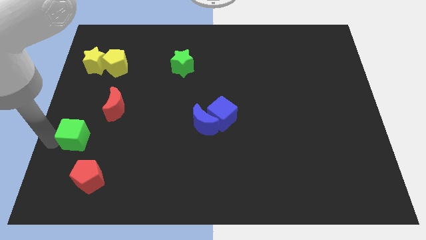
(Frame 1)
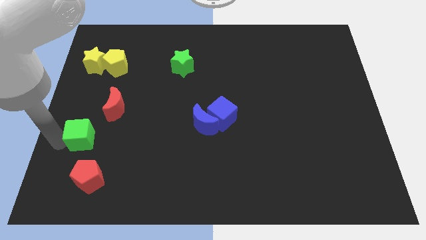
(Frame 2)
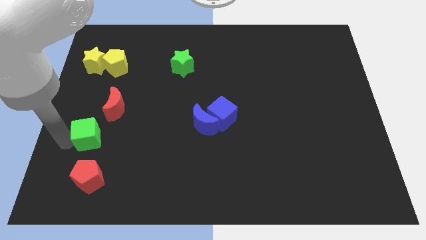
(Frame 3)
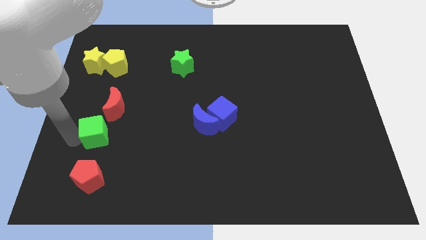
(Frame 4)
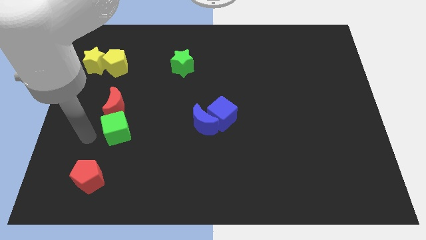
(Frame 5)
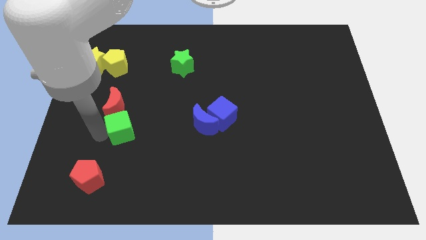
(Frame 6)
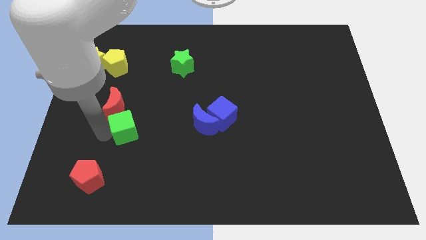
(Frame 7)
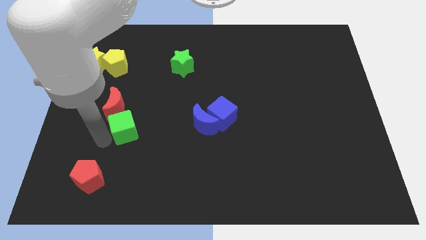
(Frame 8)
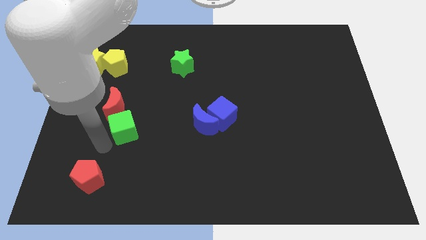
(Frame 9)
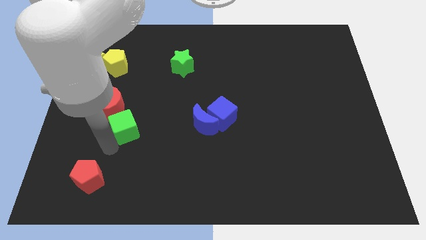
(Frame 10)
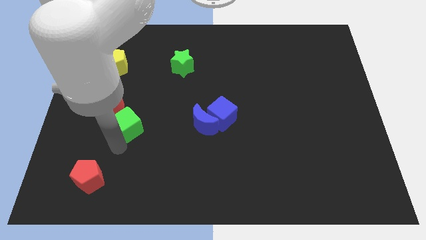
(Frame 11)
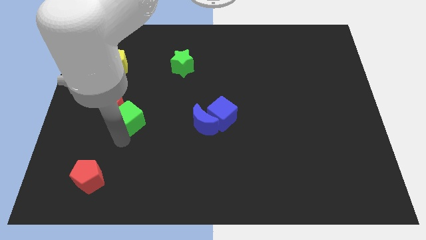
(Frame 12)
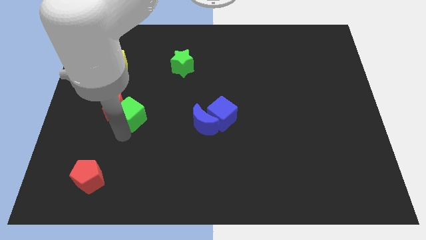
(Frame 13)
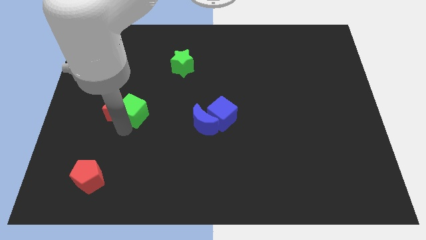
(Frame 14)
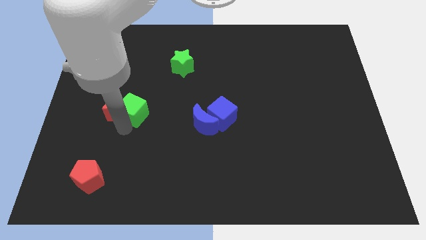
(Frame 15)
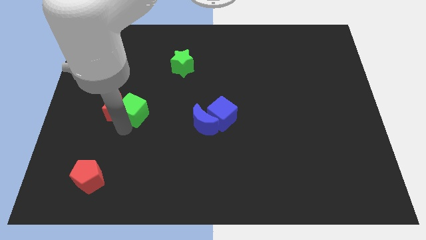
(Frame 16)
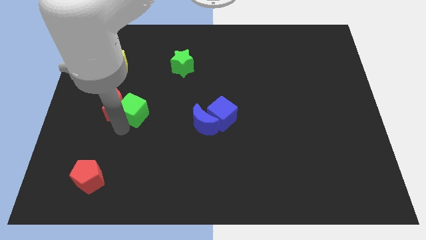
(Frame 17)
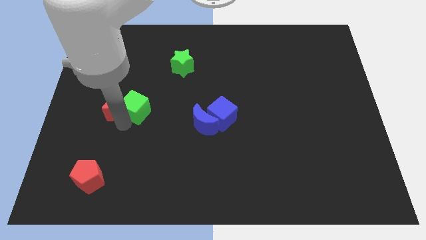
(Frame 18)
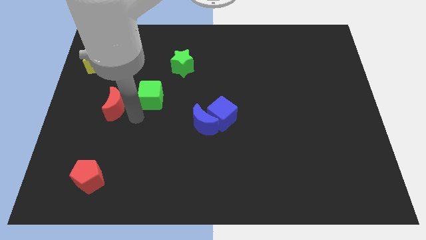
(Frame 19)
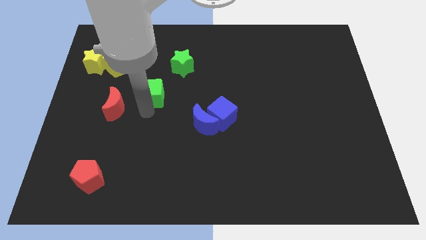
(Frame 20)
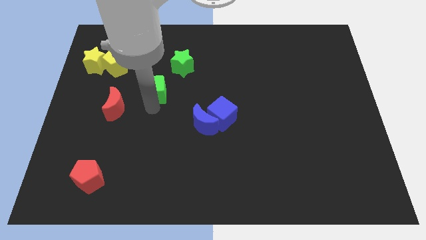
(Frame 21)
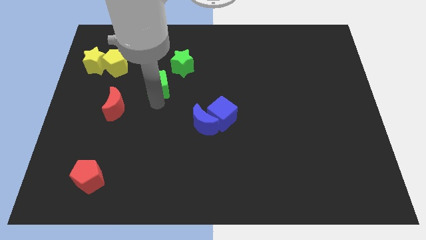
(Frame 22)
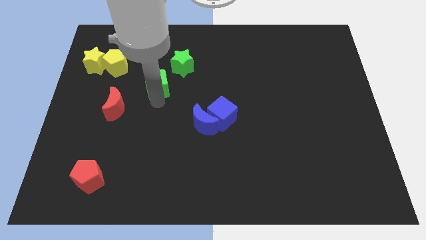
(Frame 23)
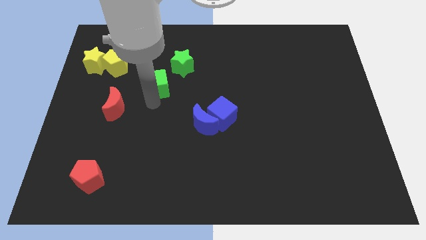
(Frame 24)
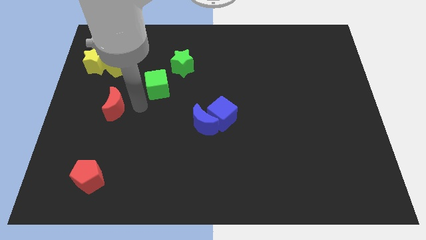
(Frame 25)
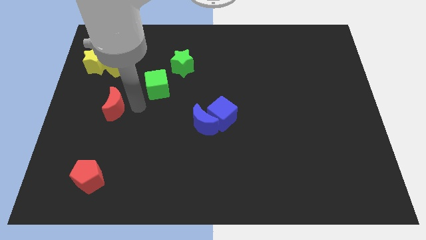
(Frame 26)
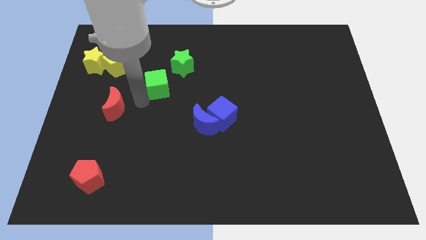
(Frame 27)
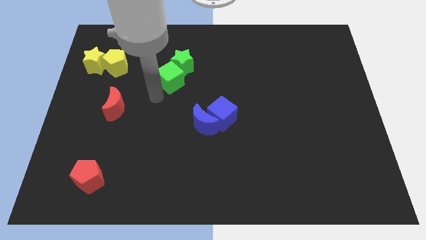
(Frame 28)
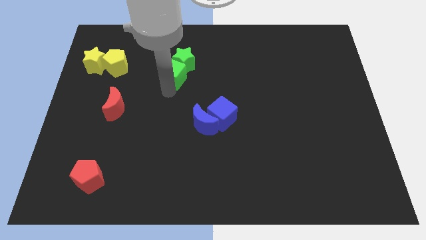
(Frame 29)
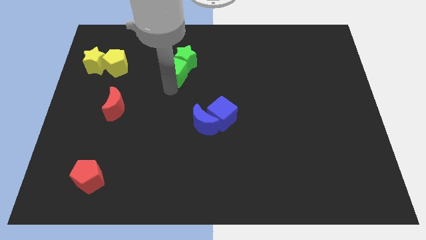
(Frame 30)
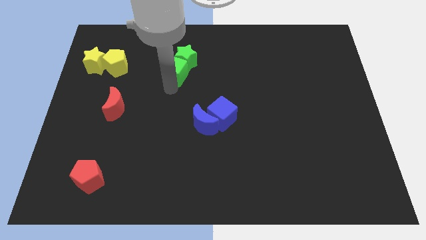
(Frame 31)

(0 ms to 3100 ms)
move green cube close to the green star

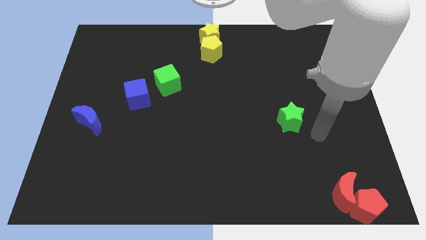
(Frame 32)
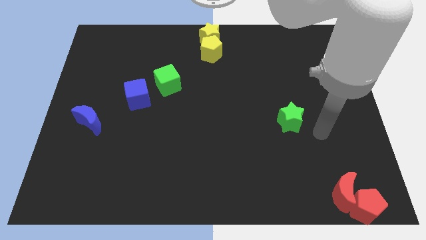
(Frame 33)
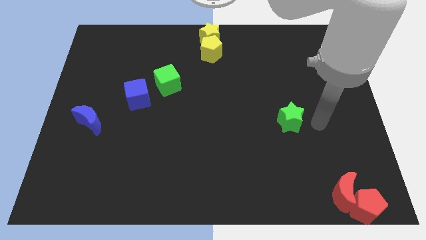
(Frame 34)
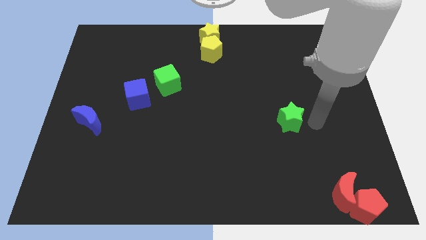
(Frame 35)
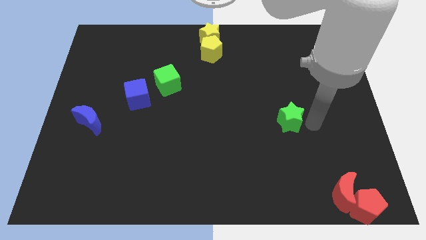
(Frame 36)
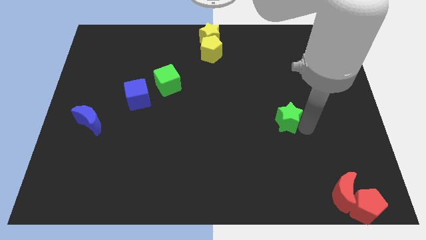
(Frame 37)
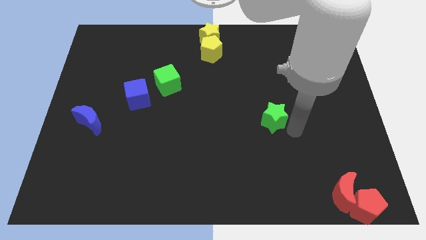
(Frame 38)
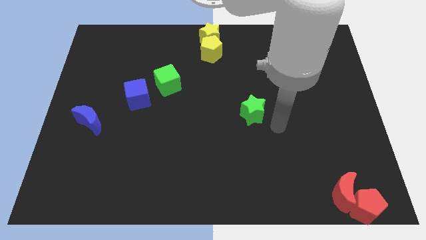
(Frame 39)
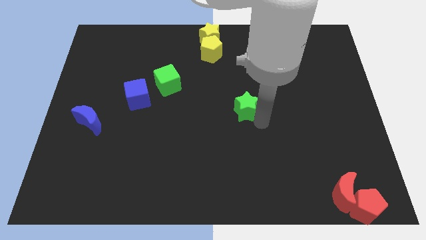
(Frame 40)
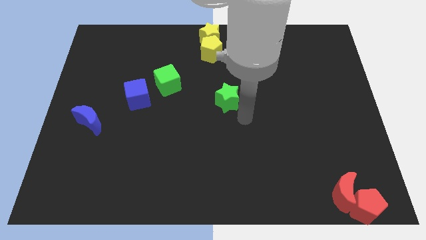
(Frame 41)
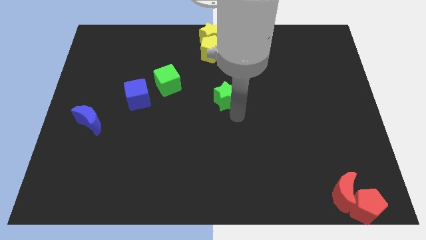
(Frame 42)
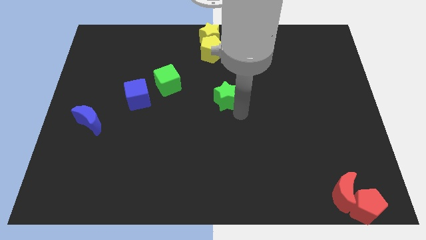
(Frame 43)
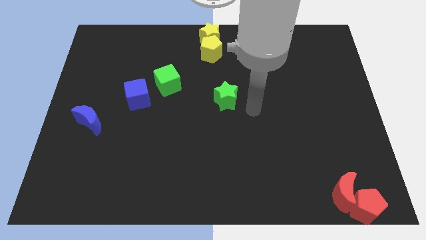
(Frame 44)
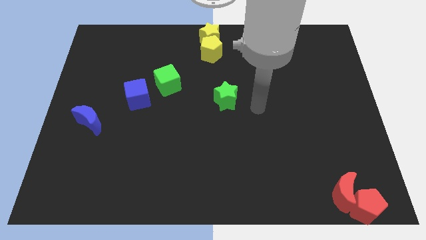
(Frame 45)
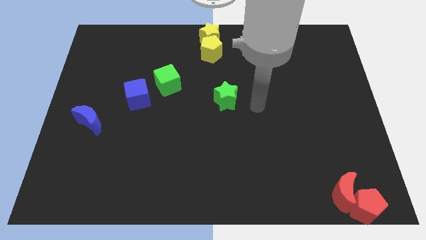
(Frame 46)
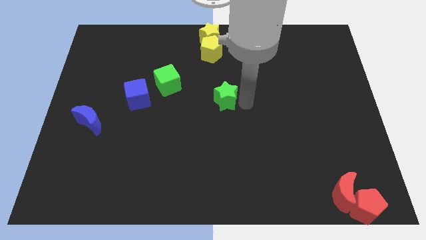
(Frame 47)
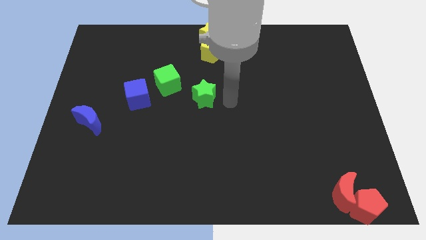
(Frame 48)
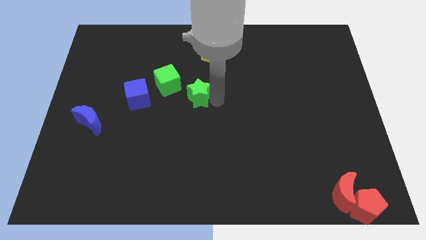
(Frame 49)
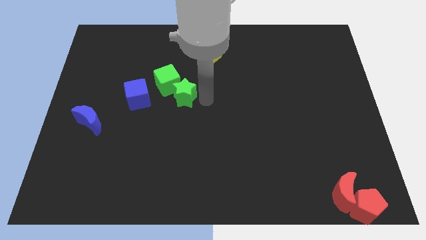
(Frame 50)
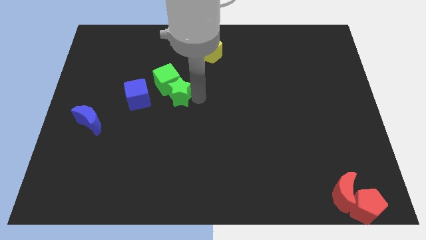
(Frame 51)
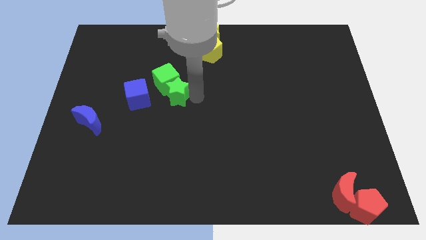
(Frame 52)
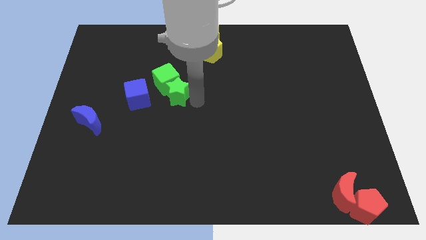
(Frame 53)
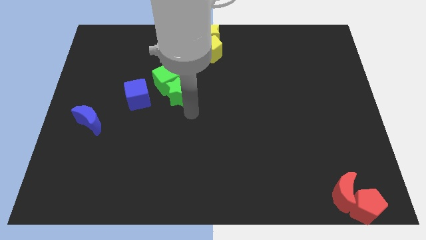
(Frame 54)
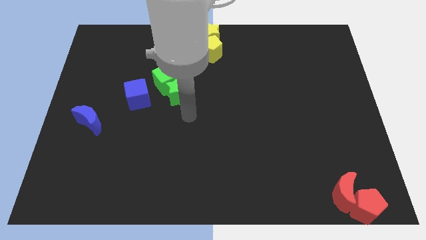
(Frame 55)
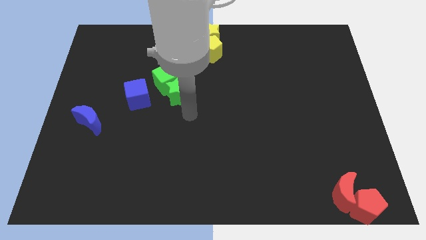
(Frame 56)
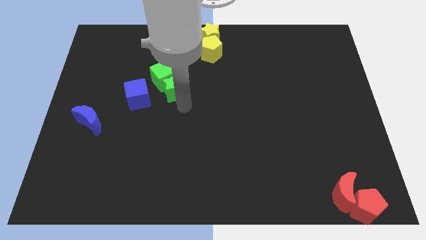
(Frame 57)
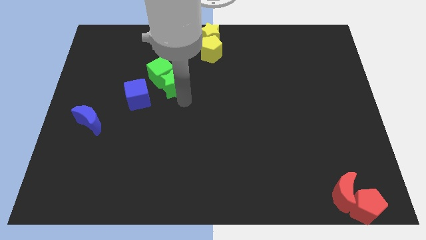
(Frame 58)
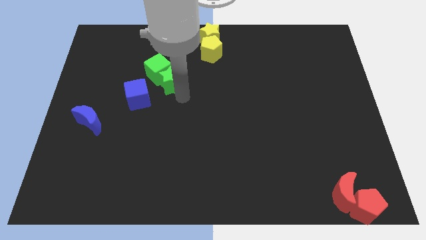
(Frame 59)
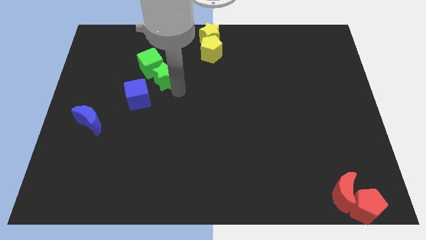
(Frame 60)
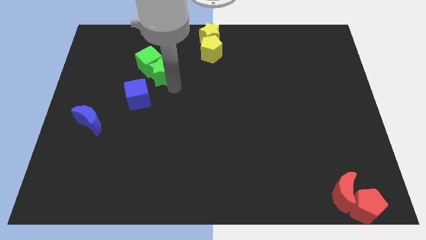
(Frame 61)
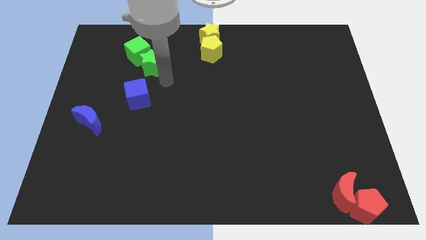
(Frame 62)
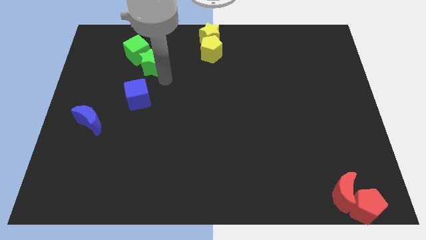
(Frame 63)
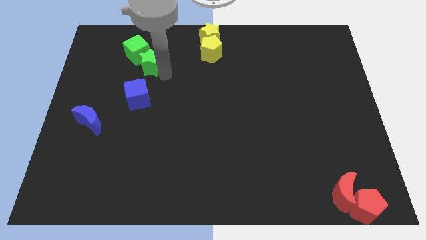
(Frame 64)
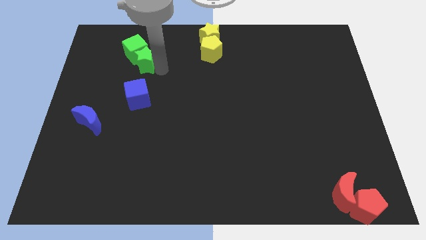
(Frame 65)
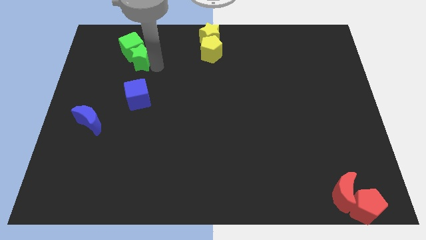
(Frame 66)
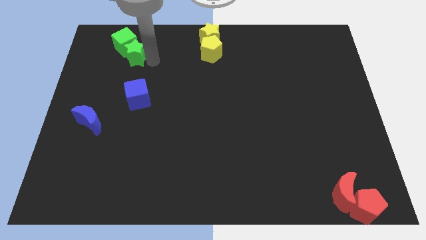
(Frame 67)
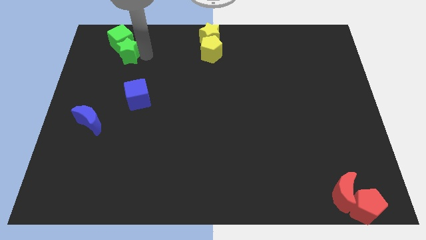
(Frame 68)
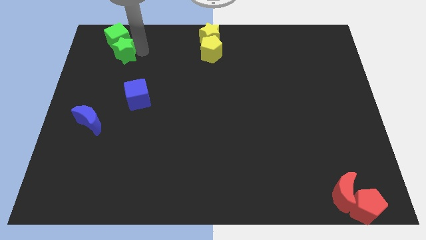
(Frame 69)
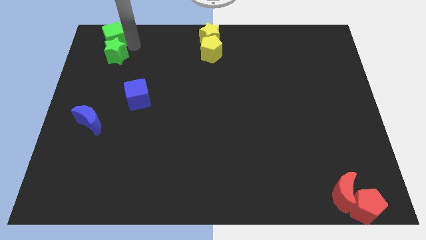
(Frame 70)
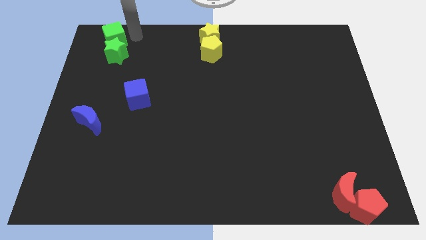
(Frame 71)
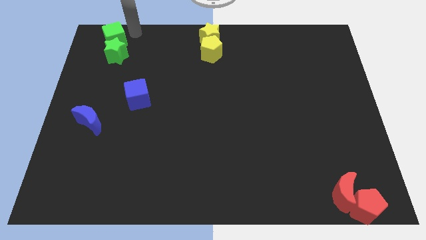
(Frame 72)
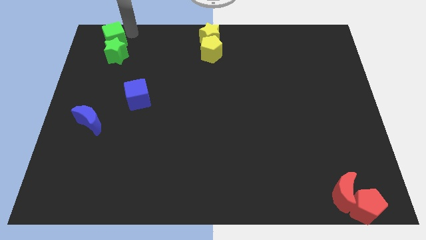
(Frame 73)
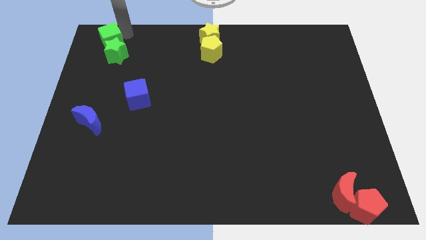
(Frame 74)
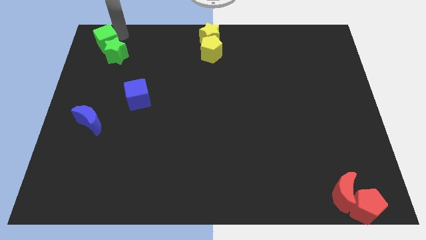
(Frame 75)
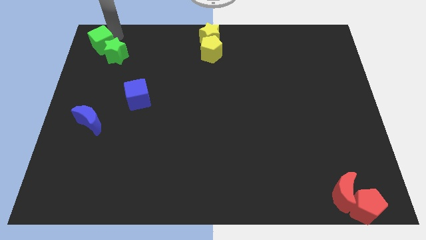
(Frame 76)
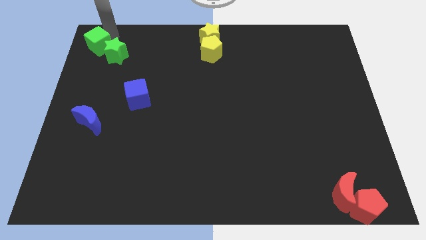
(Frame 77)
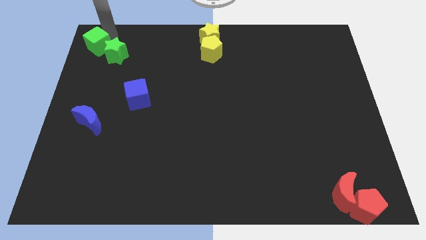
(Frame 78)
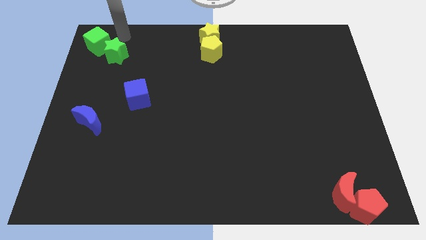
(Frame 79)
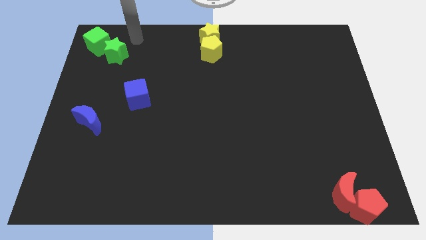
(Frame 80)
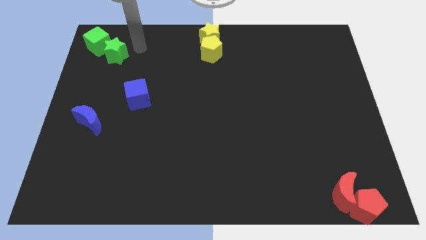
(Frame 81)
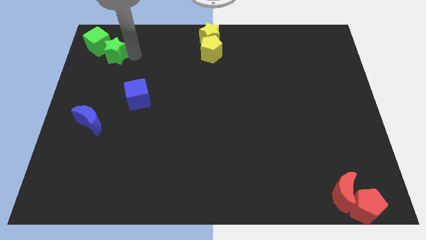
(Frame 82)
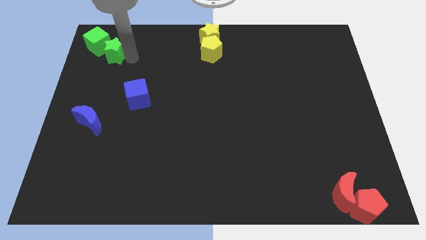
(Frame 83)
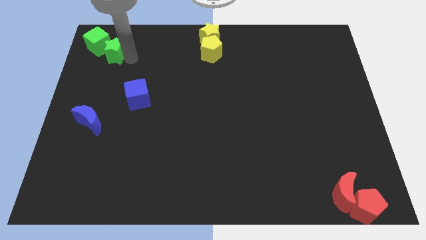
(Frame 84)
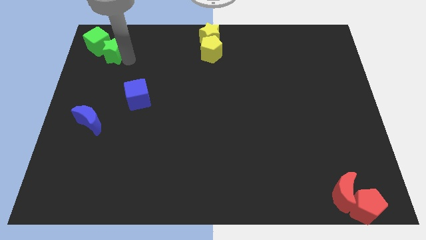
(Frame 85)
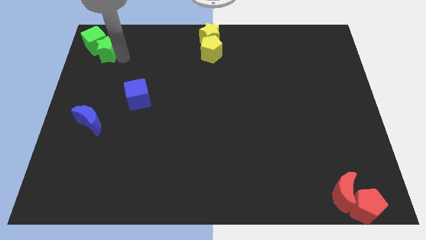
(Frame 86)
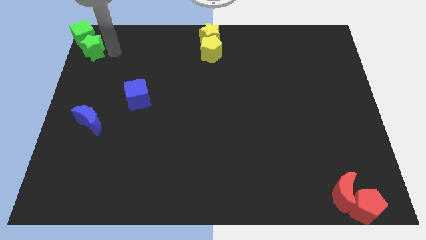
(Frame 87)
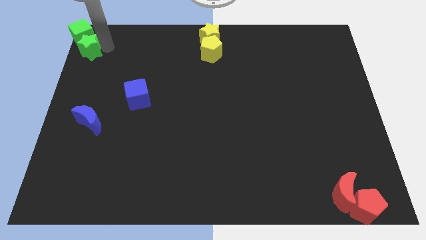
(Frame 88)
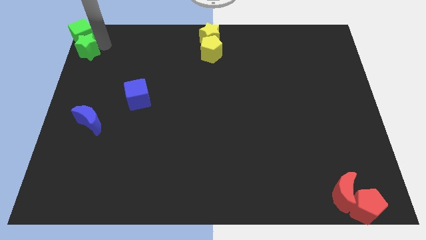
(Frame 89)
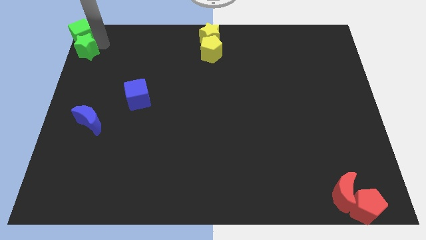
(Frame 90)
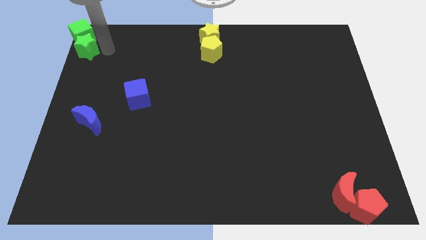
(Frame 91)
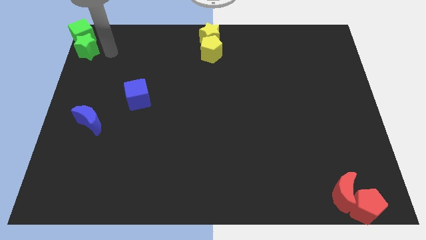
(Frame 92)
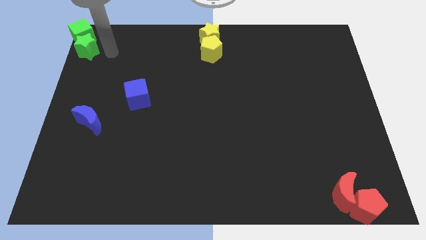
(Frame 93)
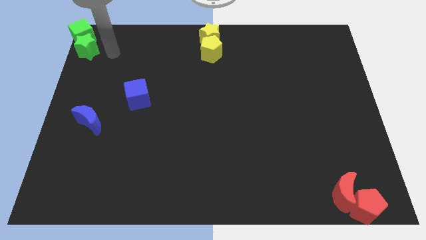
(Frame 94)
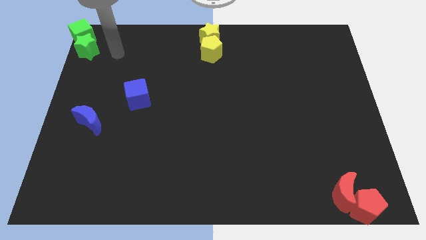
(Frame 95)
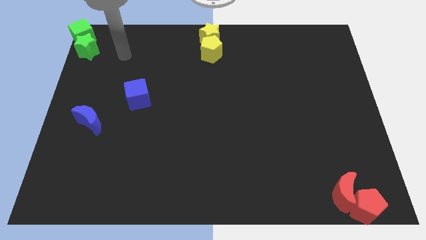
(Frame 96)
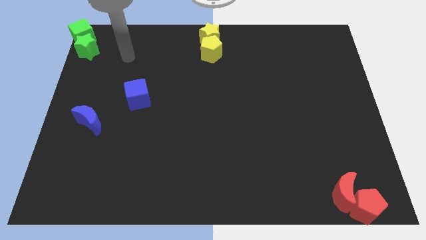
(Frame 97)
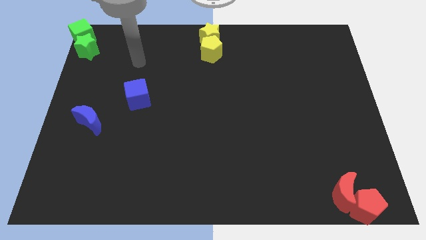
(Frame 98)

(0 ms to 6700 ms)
push both the green cube and star towards the top left corner of the board
